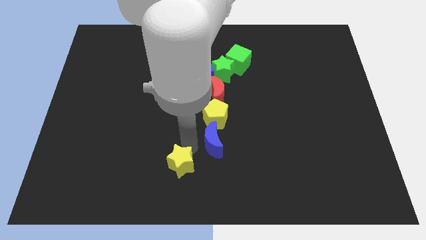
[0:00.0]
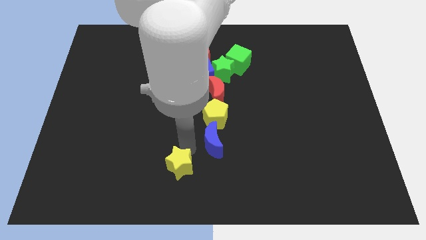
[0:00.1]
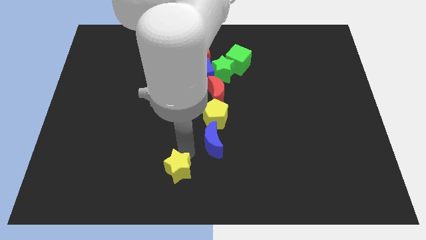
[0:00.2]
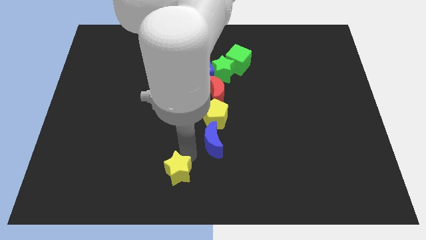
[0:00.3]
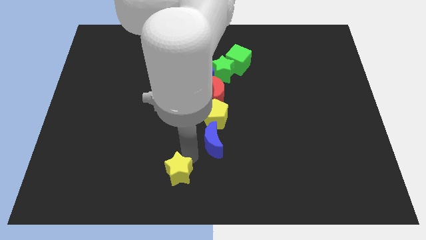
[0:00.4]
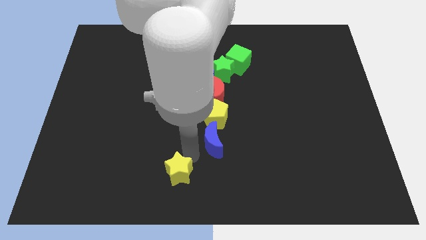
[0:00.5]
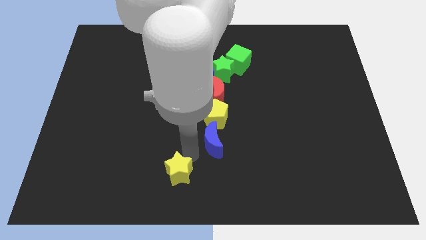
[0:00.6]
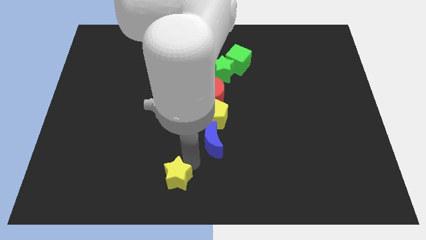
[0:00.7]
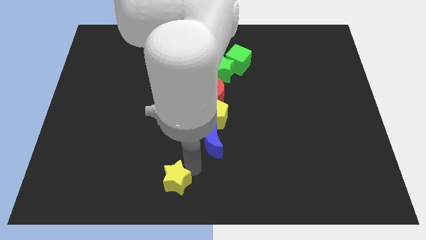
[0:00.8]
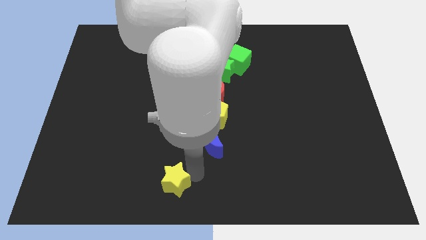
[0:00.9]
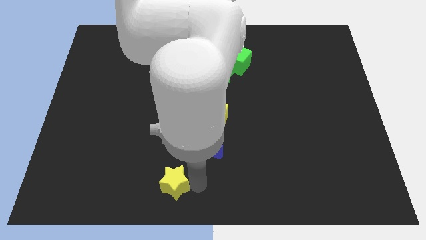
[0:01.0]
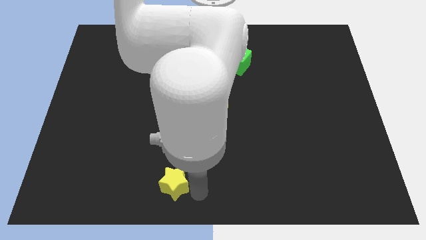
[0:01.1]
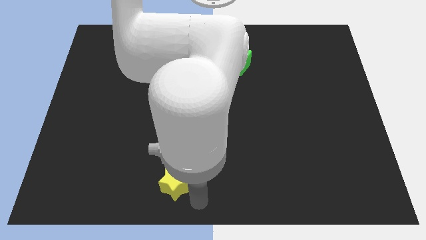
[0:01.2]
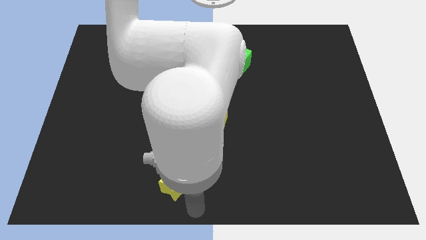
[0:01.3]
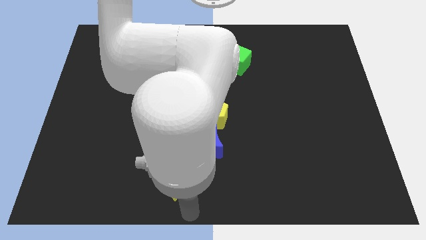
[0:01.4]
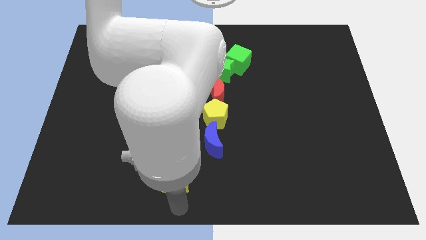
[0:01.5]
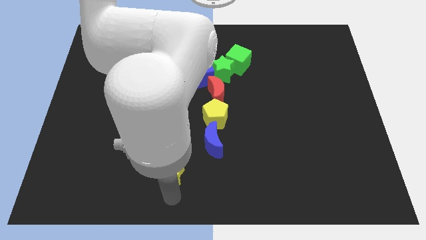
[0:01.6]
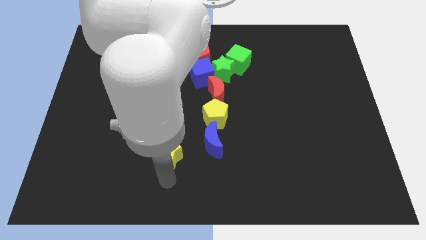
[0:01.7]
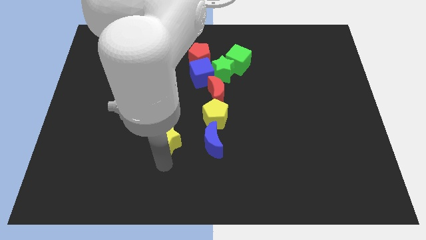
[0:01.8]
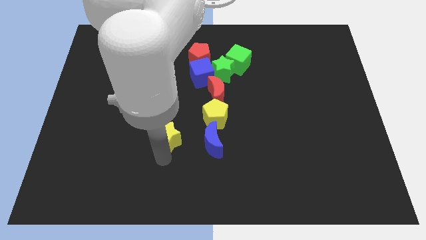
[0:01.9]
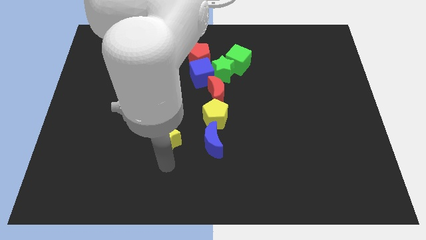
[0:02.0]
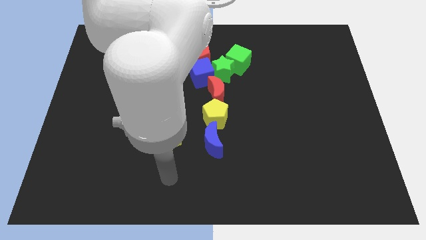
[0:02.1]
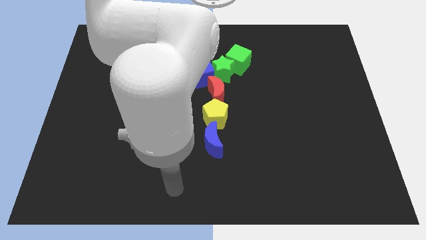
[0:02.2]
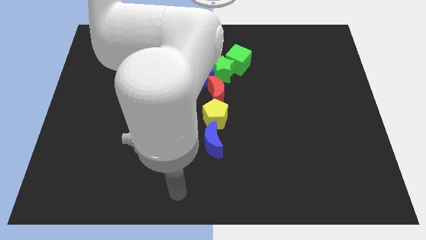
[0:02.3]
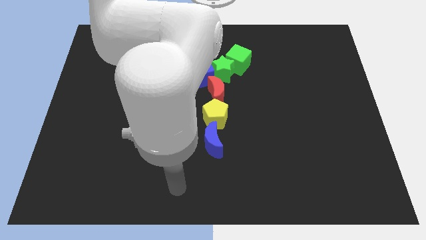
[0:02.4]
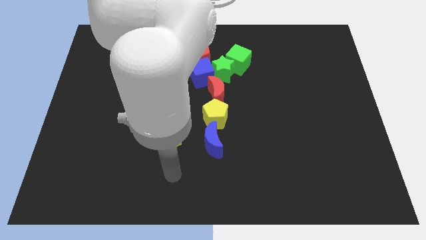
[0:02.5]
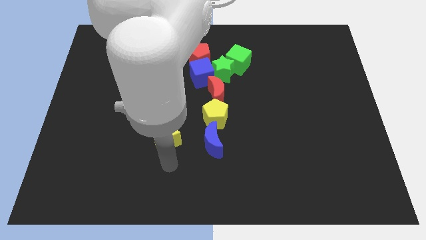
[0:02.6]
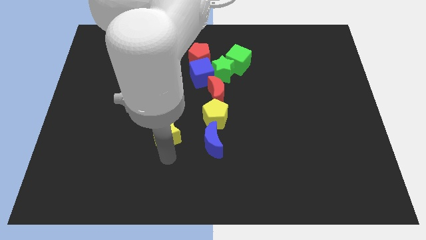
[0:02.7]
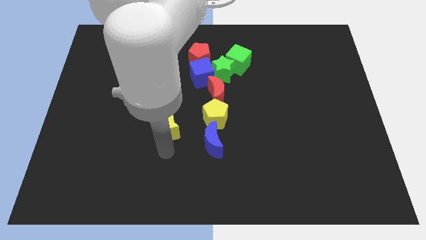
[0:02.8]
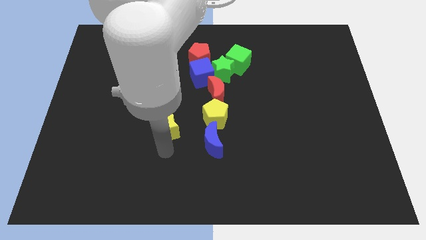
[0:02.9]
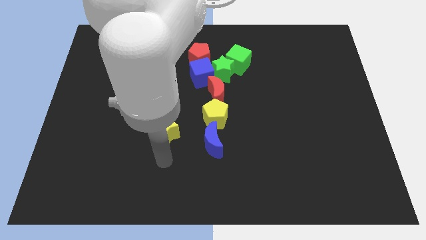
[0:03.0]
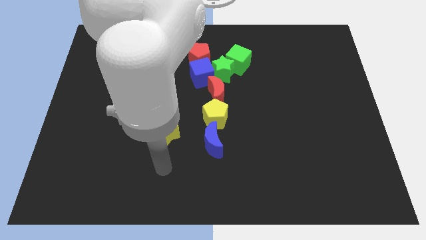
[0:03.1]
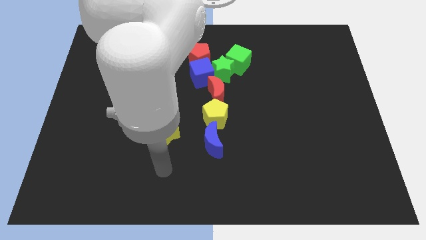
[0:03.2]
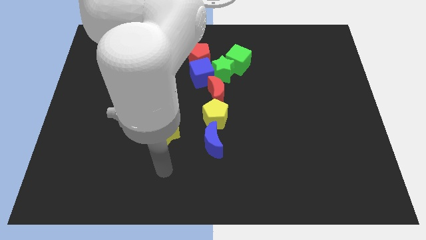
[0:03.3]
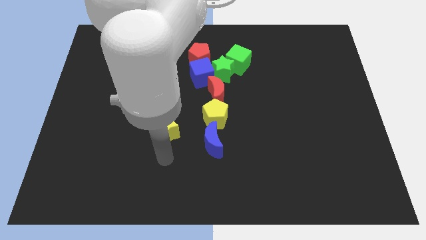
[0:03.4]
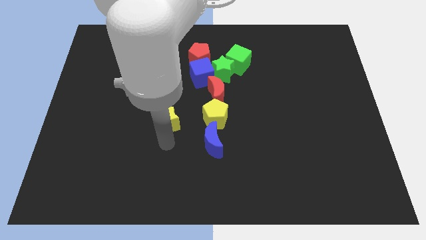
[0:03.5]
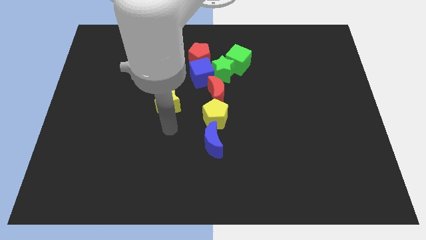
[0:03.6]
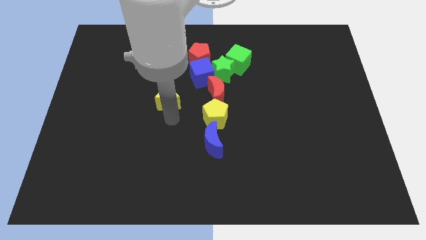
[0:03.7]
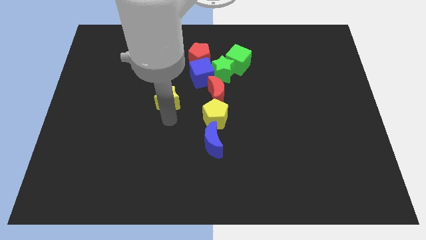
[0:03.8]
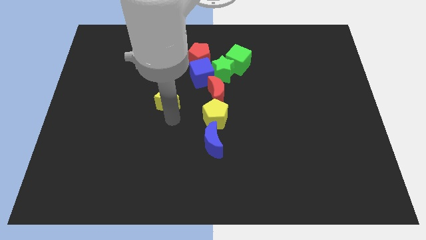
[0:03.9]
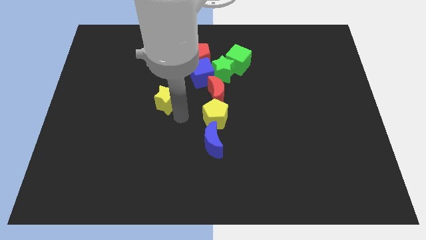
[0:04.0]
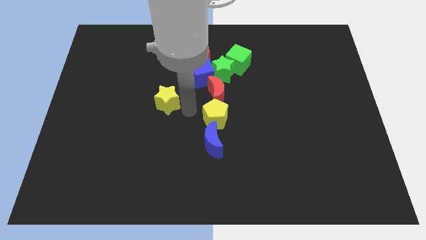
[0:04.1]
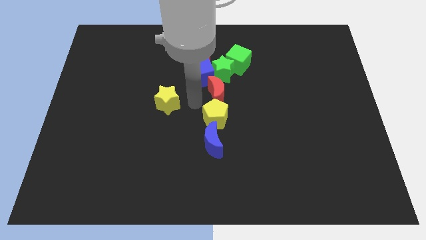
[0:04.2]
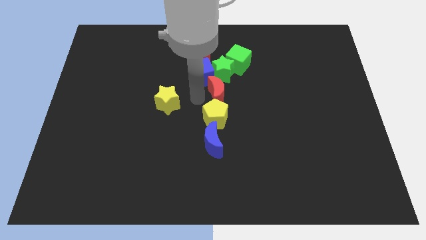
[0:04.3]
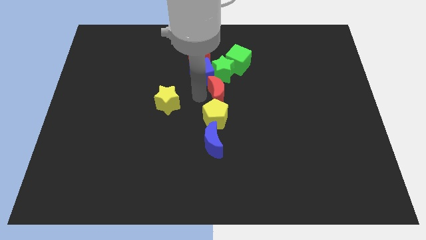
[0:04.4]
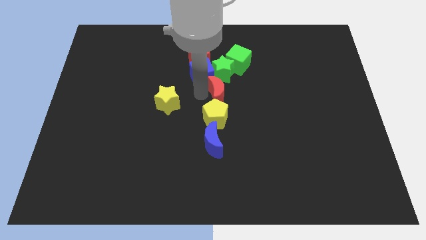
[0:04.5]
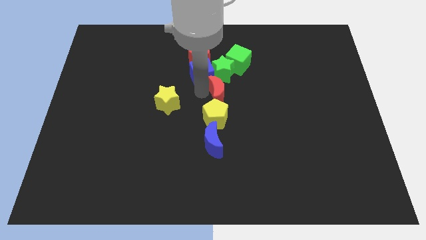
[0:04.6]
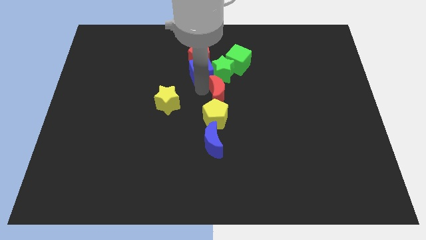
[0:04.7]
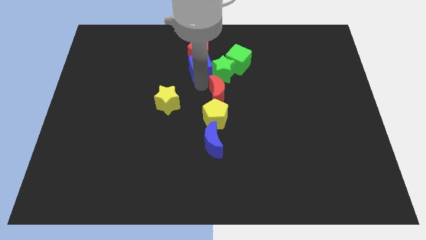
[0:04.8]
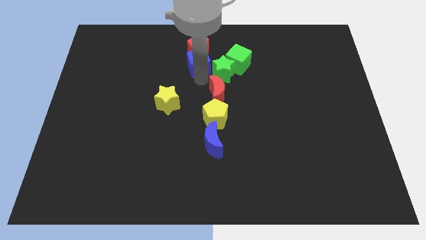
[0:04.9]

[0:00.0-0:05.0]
move the yellow star to the left side of red moon

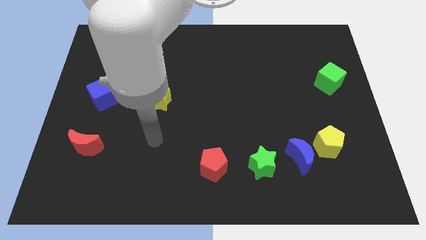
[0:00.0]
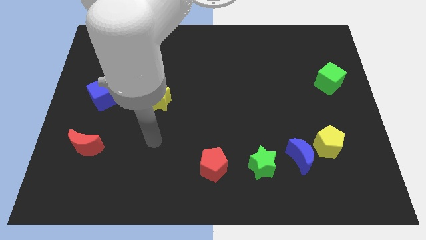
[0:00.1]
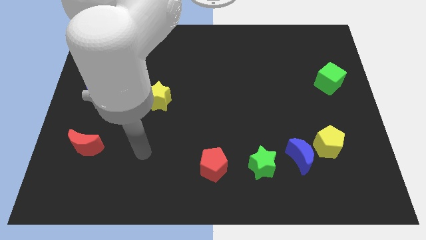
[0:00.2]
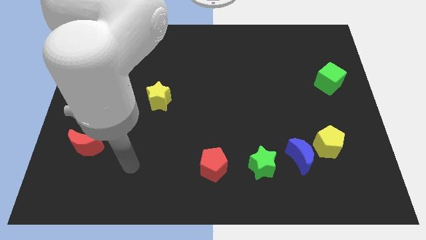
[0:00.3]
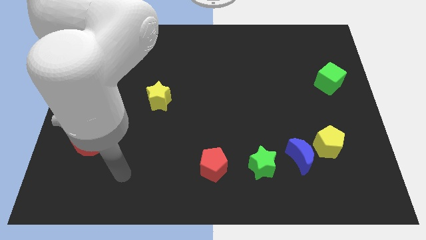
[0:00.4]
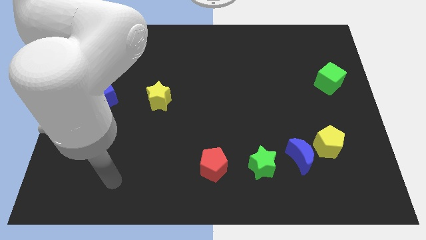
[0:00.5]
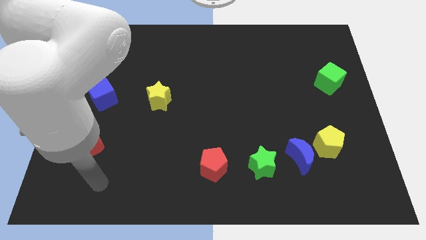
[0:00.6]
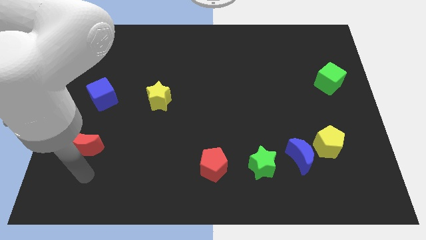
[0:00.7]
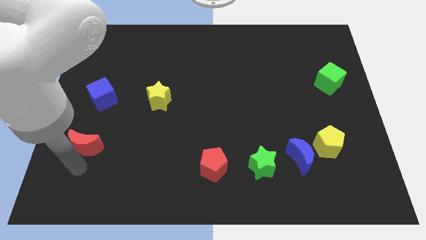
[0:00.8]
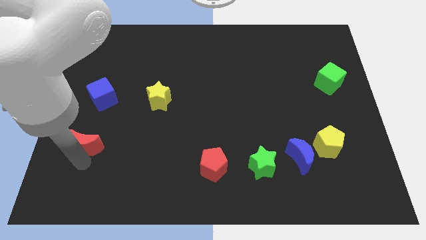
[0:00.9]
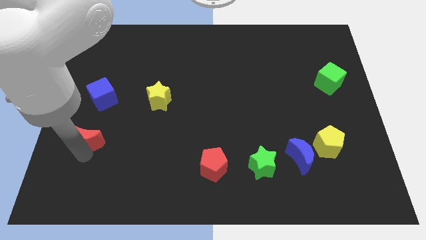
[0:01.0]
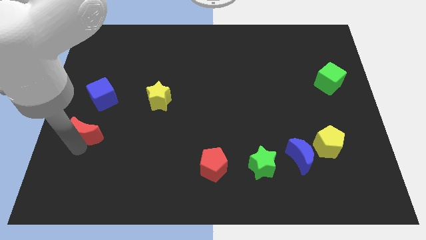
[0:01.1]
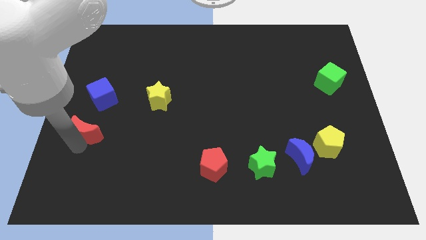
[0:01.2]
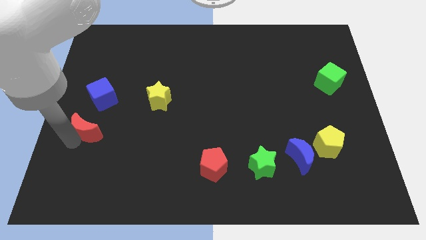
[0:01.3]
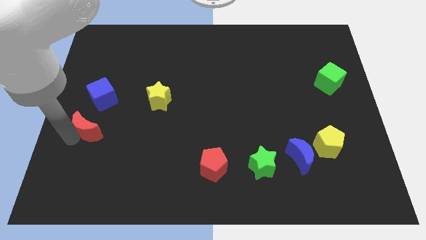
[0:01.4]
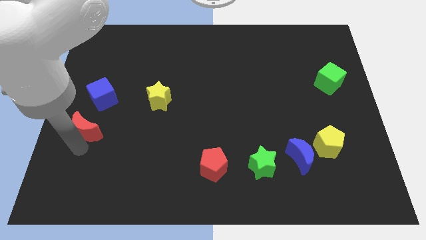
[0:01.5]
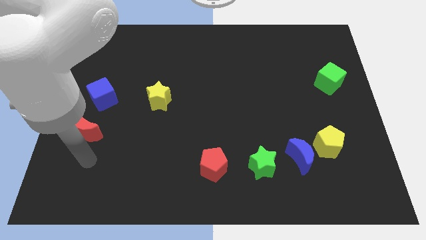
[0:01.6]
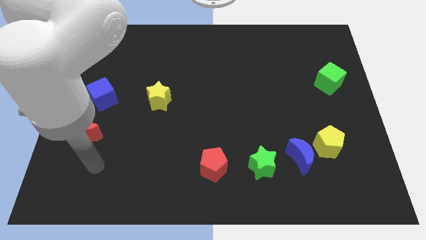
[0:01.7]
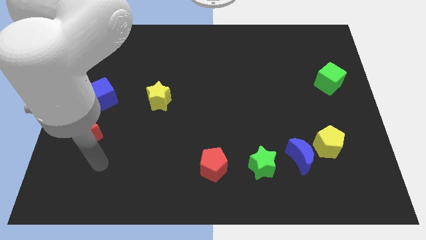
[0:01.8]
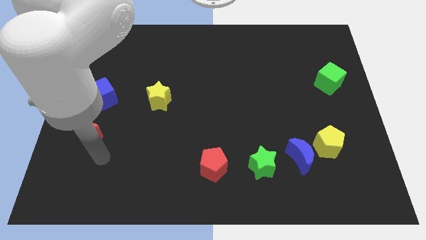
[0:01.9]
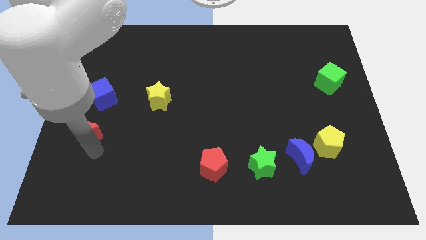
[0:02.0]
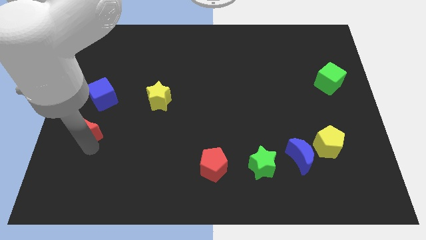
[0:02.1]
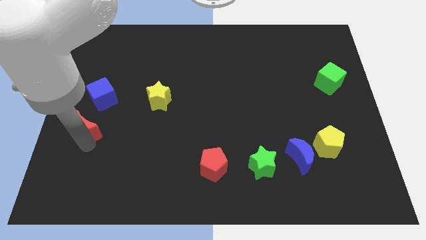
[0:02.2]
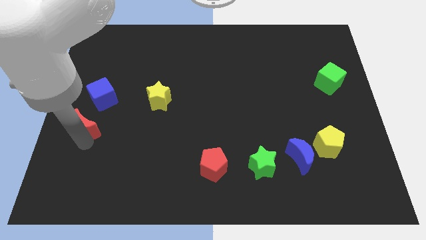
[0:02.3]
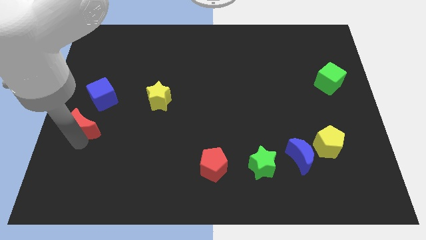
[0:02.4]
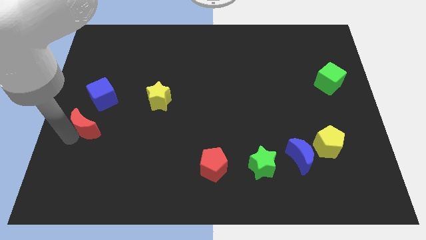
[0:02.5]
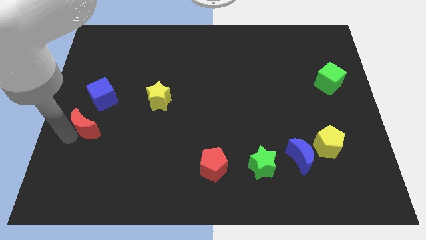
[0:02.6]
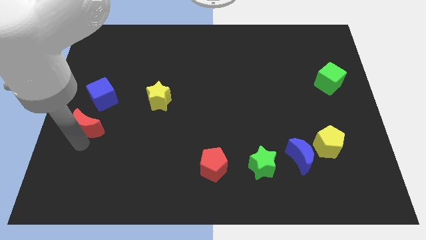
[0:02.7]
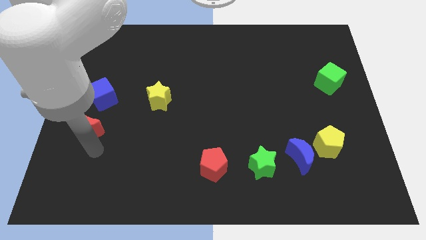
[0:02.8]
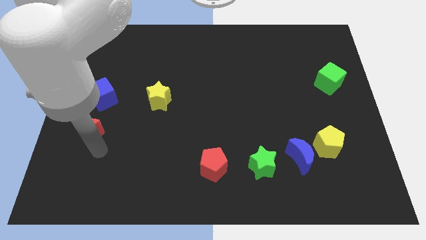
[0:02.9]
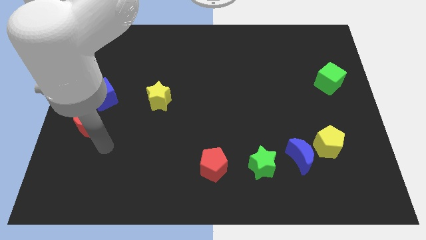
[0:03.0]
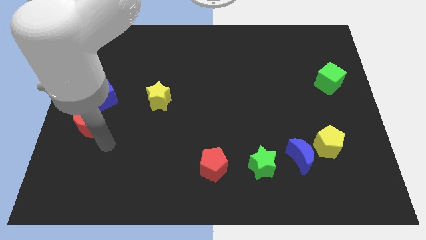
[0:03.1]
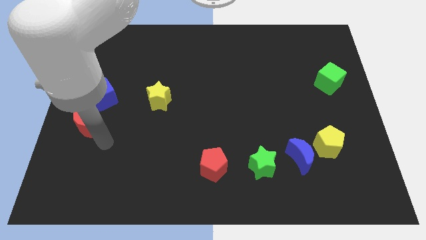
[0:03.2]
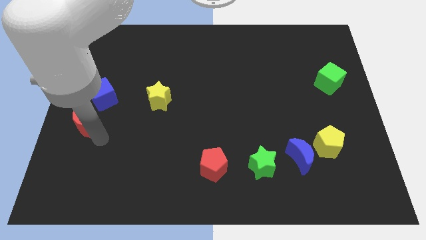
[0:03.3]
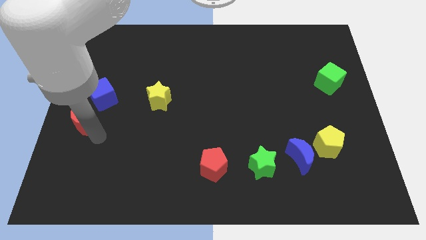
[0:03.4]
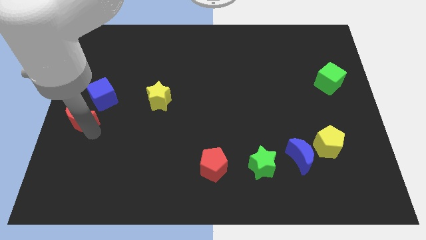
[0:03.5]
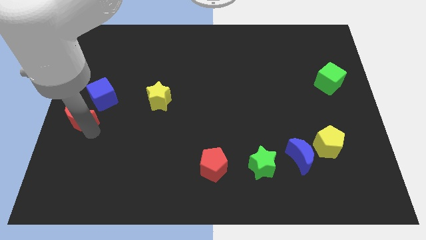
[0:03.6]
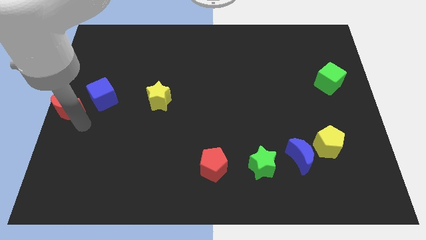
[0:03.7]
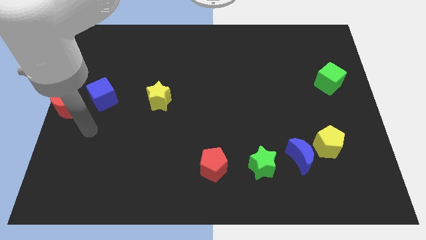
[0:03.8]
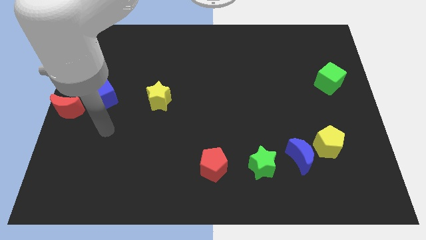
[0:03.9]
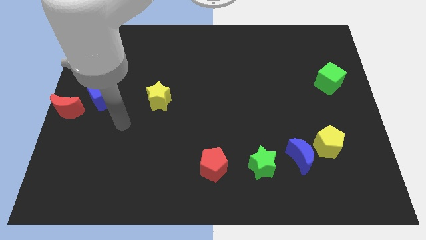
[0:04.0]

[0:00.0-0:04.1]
place red moon left to the blue cube

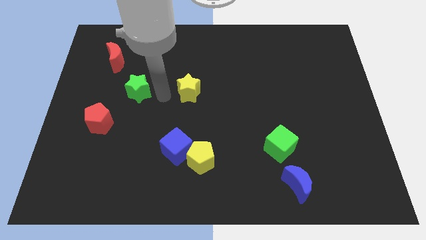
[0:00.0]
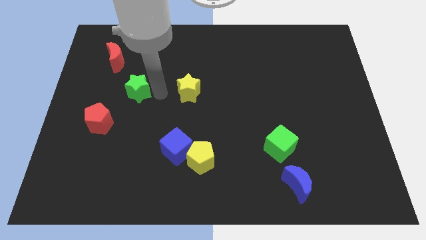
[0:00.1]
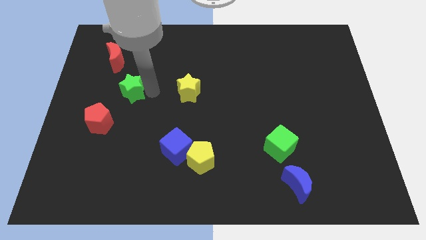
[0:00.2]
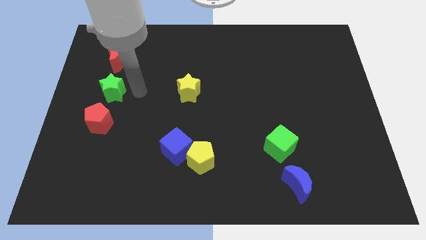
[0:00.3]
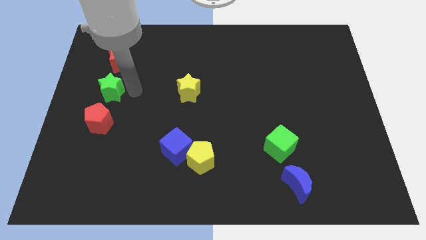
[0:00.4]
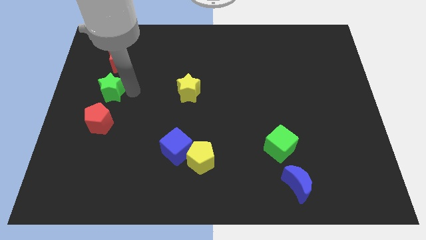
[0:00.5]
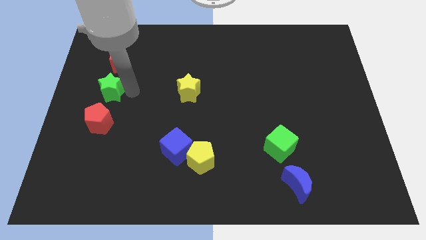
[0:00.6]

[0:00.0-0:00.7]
push the green star below the red crescent
